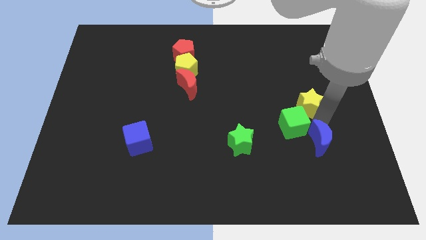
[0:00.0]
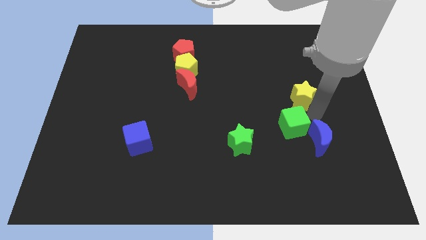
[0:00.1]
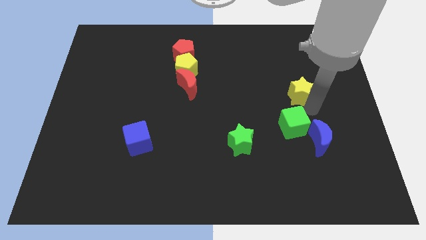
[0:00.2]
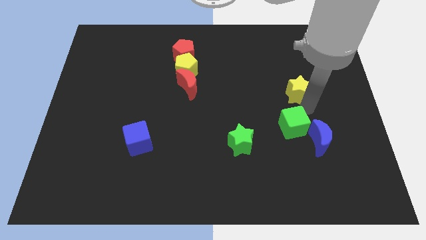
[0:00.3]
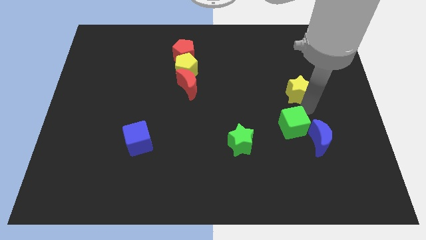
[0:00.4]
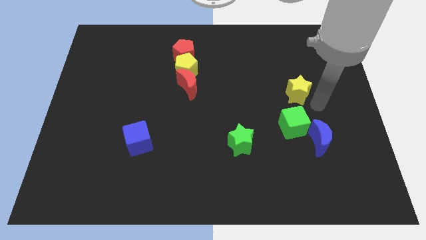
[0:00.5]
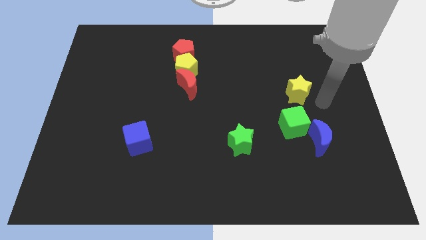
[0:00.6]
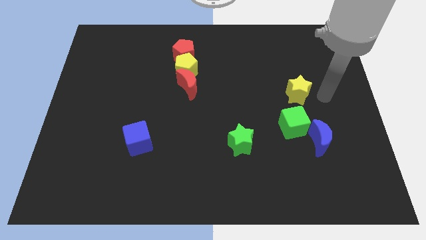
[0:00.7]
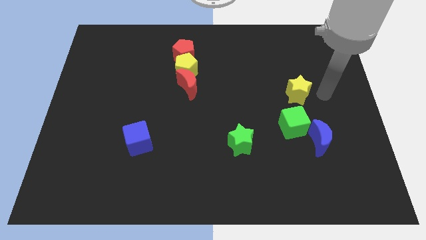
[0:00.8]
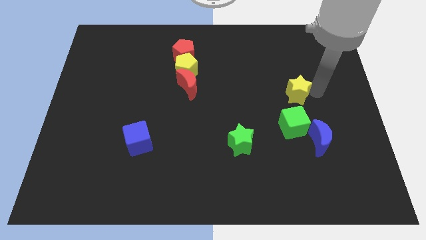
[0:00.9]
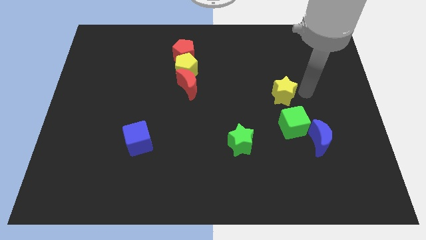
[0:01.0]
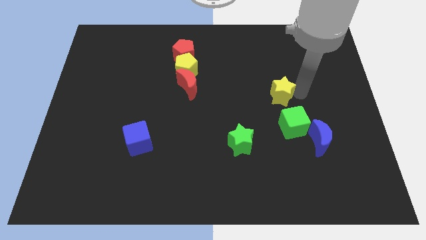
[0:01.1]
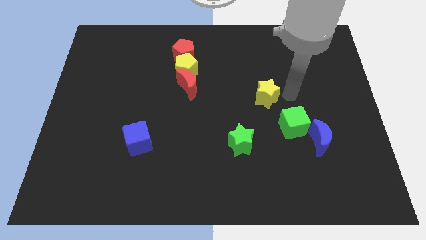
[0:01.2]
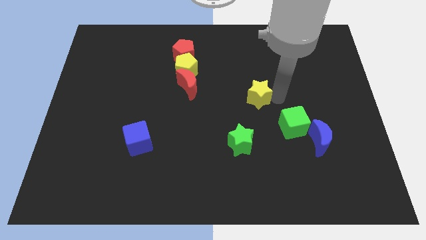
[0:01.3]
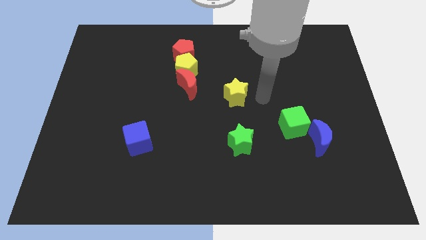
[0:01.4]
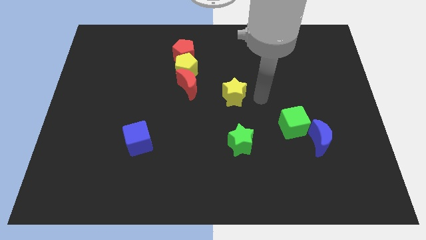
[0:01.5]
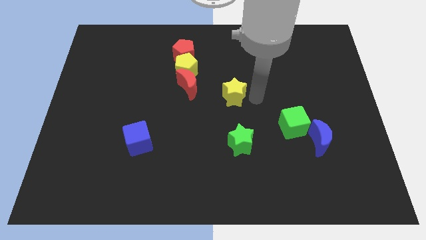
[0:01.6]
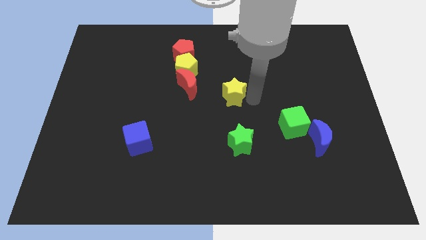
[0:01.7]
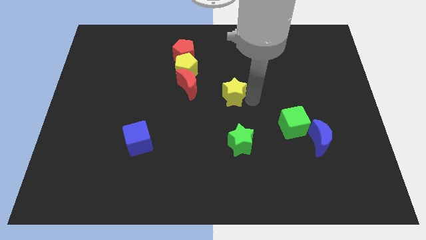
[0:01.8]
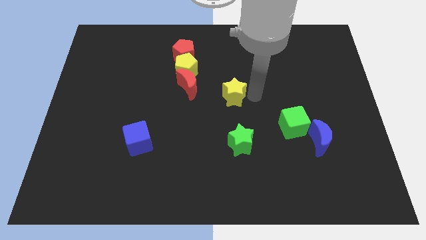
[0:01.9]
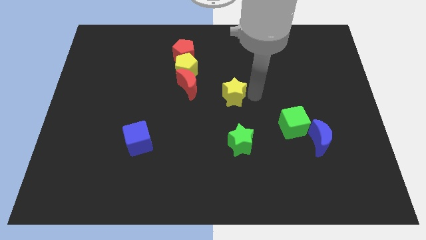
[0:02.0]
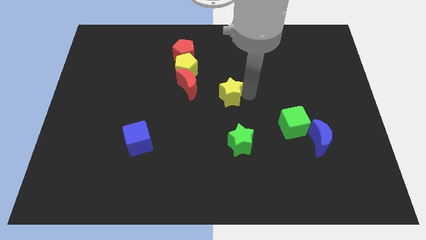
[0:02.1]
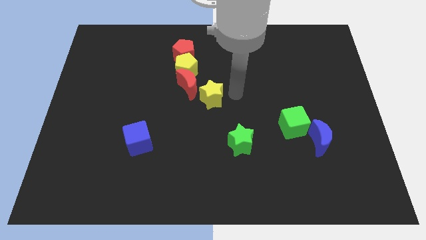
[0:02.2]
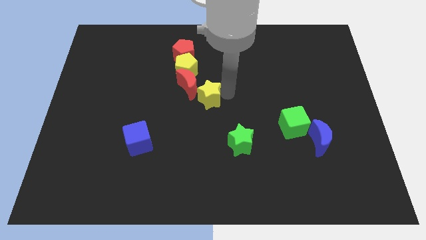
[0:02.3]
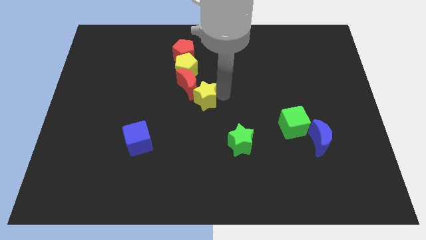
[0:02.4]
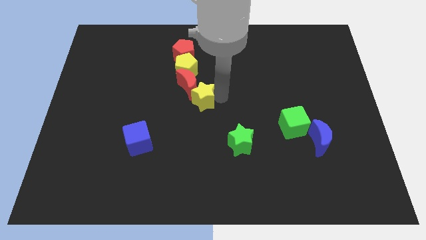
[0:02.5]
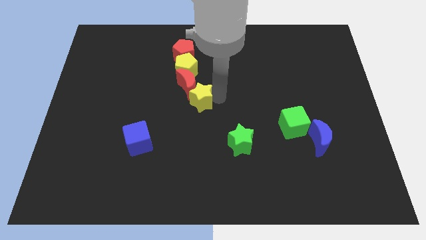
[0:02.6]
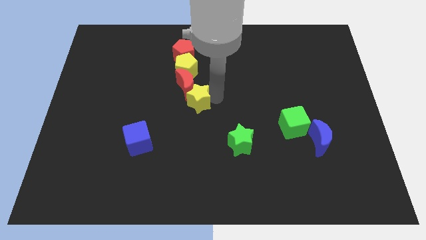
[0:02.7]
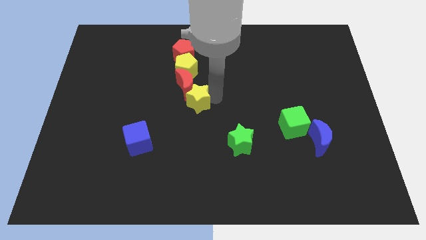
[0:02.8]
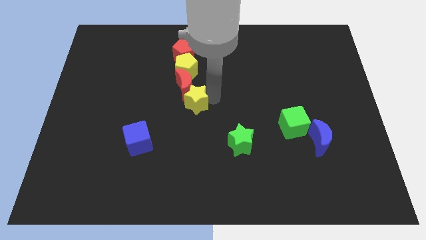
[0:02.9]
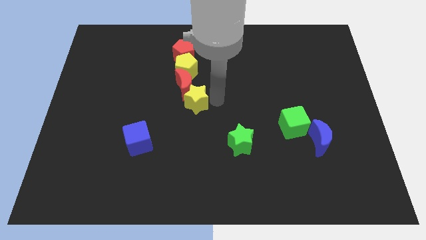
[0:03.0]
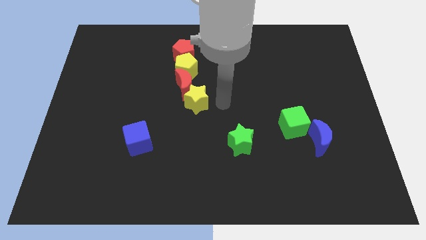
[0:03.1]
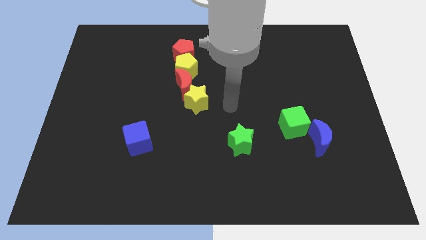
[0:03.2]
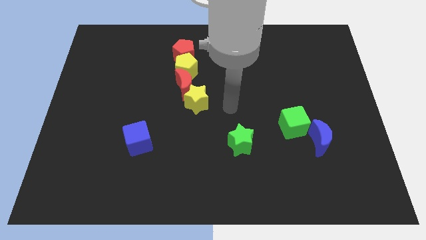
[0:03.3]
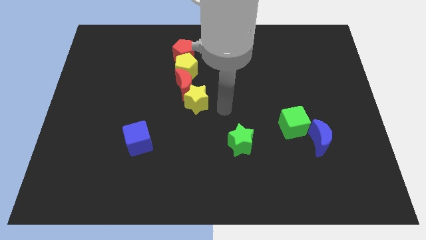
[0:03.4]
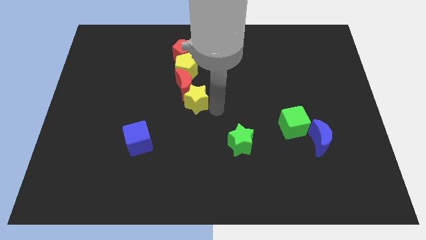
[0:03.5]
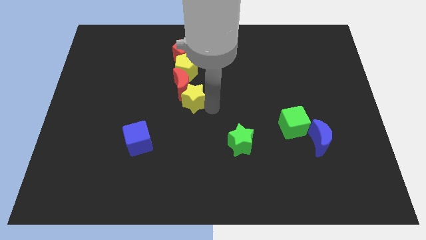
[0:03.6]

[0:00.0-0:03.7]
place the yellow star below the red moon

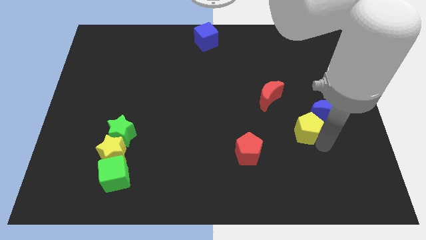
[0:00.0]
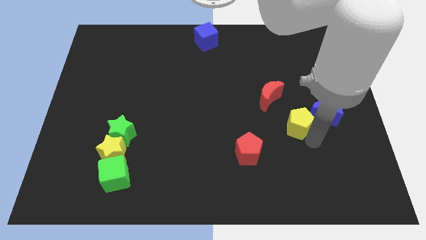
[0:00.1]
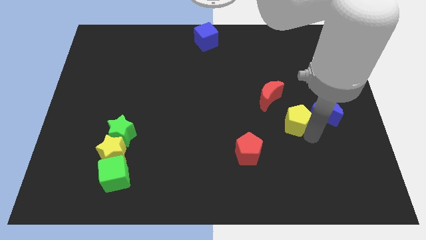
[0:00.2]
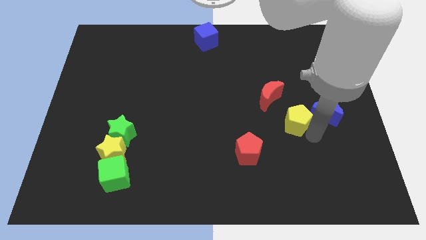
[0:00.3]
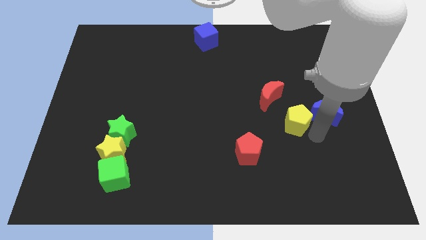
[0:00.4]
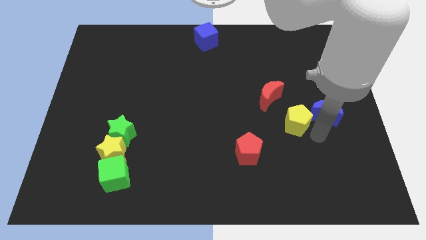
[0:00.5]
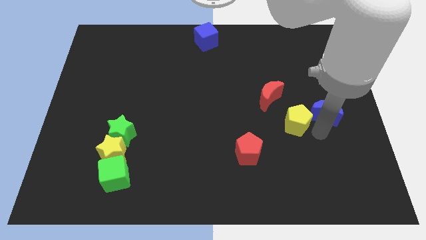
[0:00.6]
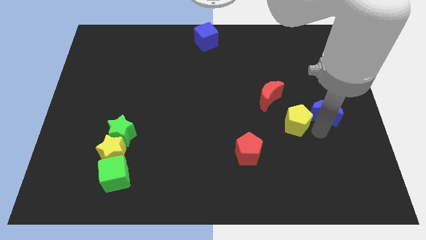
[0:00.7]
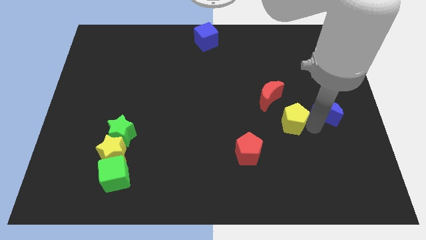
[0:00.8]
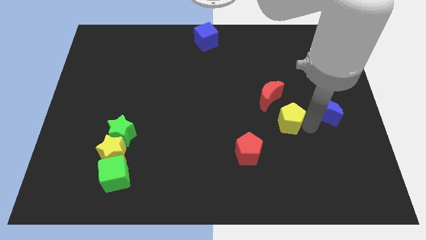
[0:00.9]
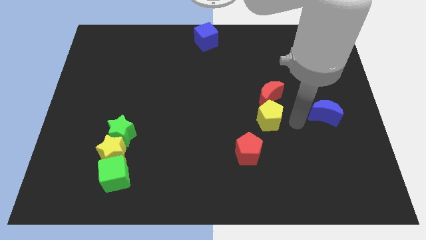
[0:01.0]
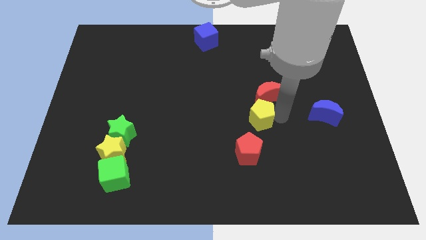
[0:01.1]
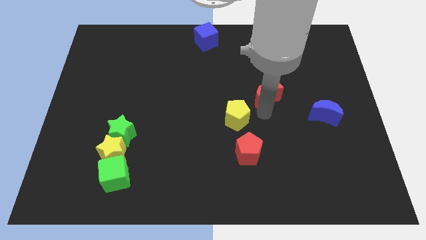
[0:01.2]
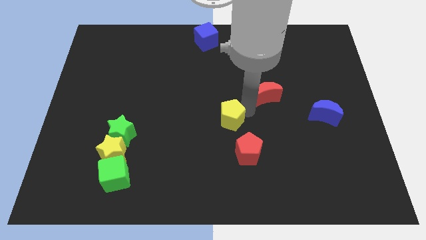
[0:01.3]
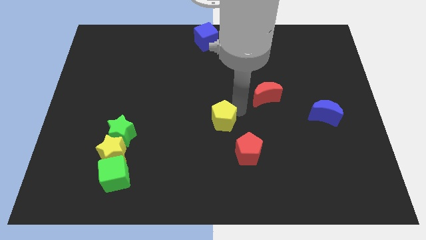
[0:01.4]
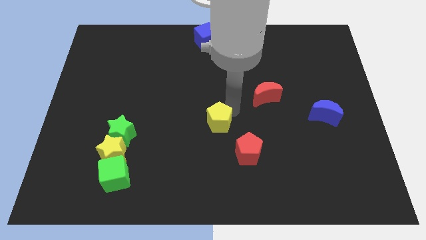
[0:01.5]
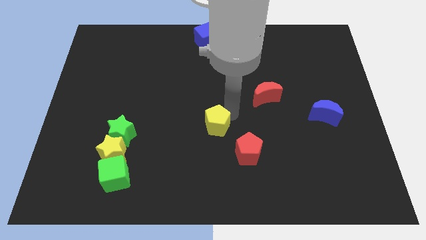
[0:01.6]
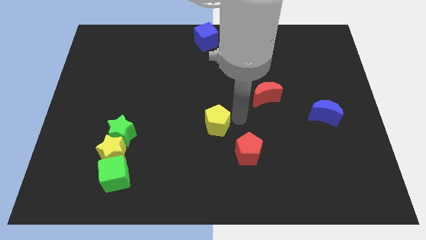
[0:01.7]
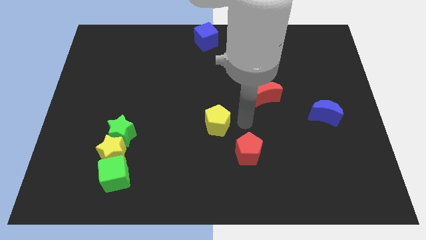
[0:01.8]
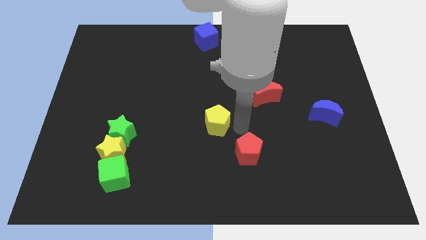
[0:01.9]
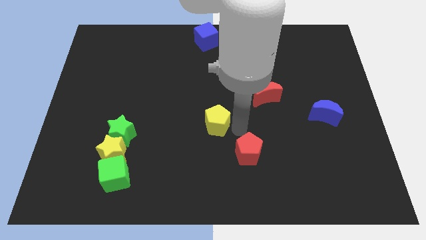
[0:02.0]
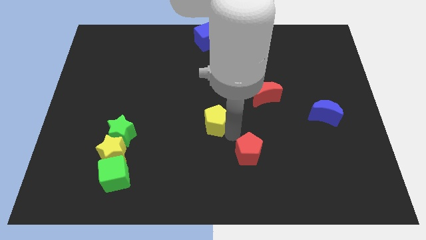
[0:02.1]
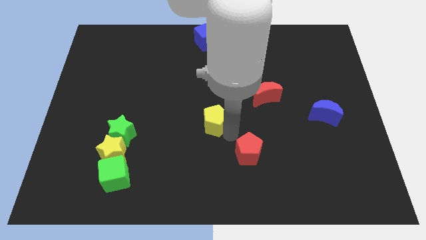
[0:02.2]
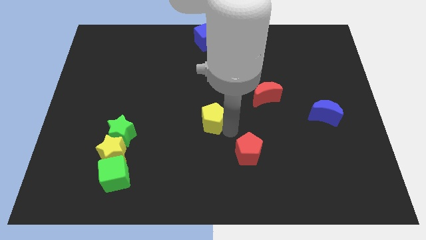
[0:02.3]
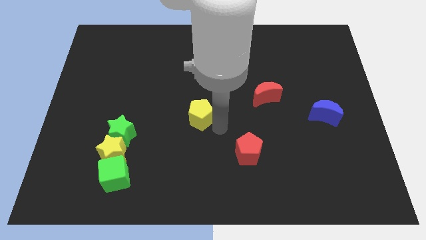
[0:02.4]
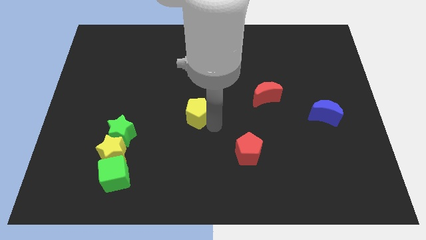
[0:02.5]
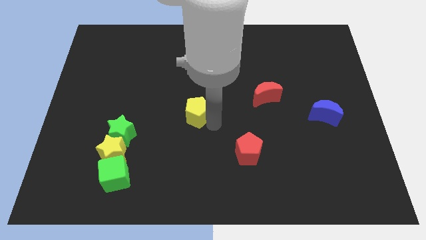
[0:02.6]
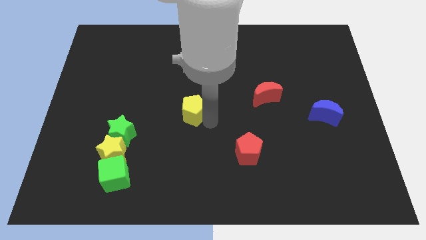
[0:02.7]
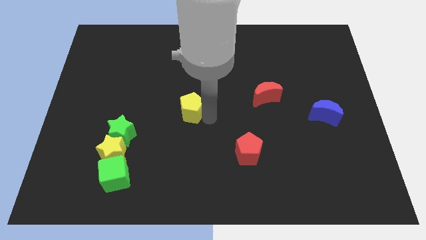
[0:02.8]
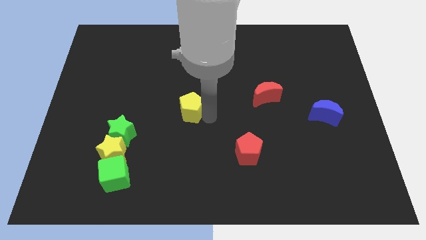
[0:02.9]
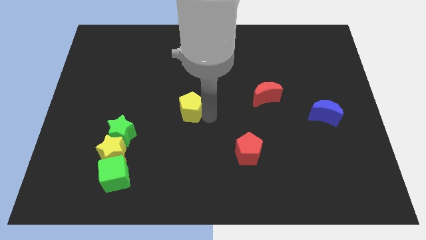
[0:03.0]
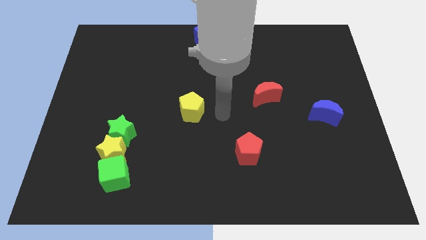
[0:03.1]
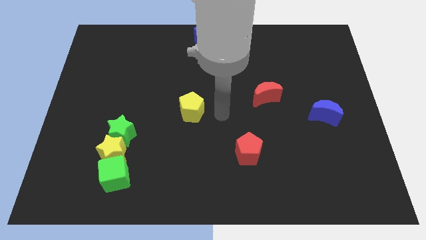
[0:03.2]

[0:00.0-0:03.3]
separate the yellow pentagon from the blue moon

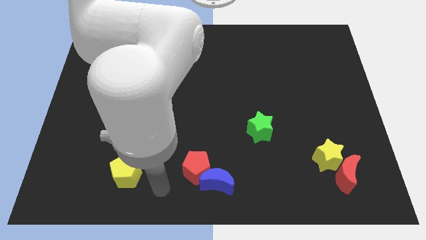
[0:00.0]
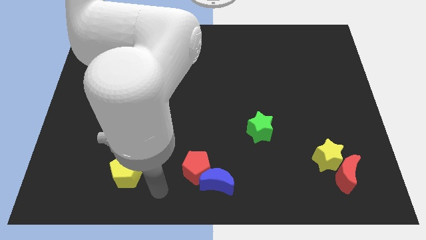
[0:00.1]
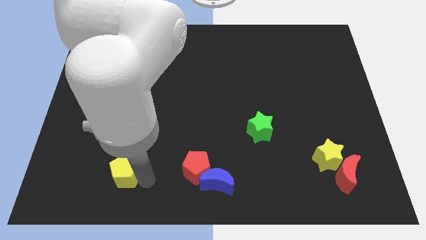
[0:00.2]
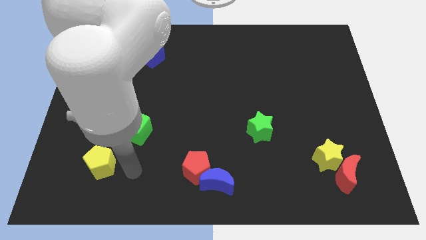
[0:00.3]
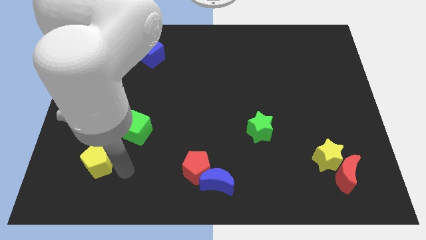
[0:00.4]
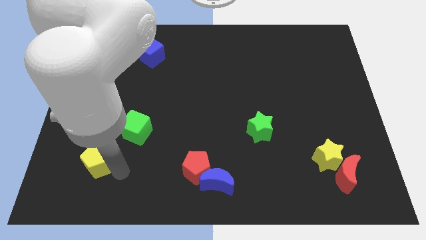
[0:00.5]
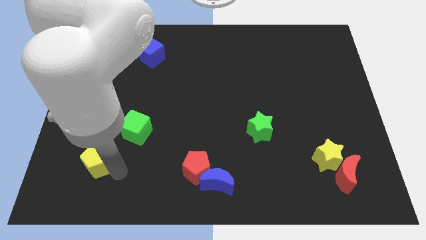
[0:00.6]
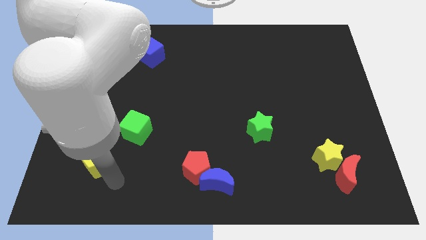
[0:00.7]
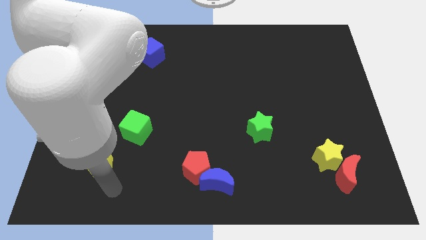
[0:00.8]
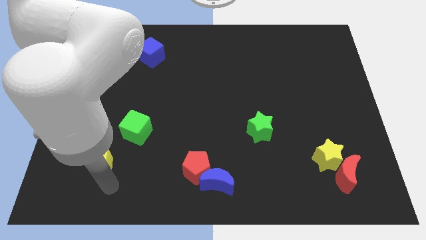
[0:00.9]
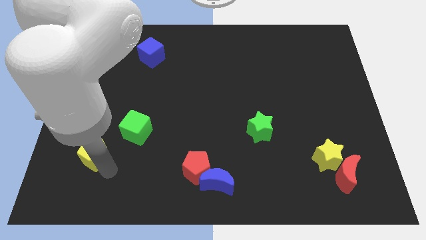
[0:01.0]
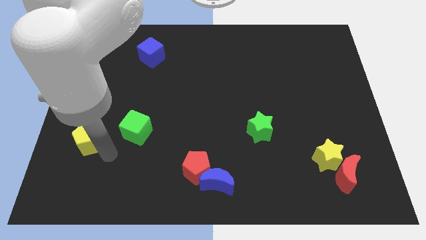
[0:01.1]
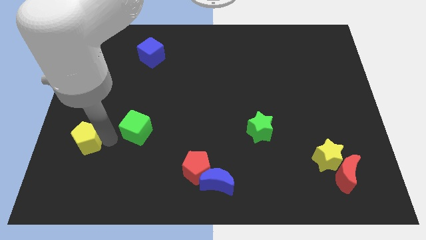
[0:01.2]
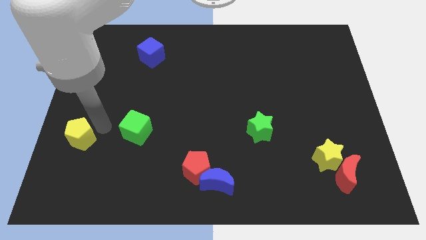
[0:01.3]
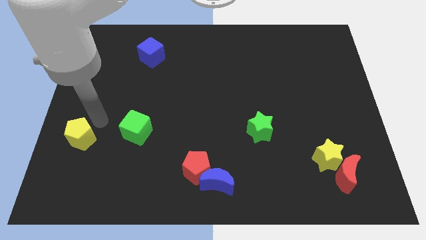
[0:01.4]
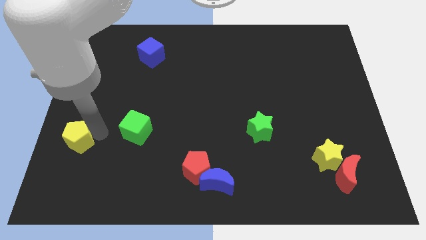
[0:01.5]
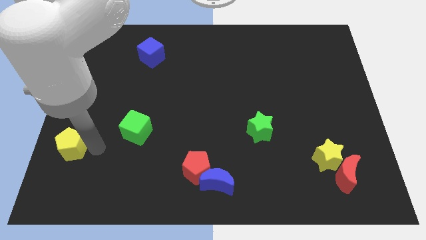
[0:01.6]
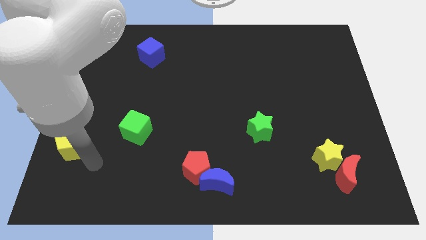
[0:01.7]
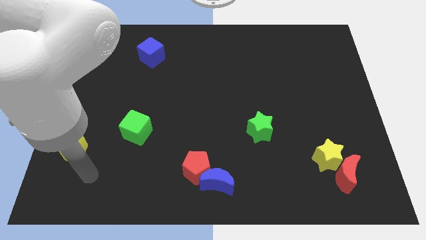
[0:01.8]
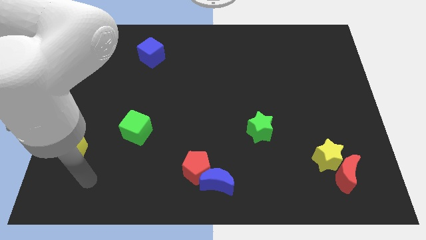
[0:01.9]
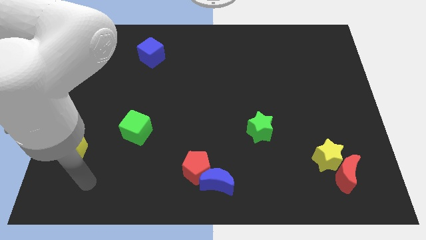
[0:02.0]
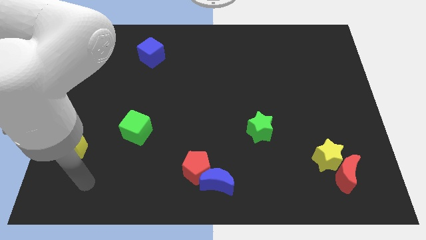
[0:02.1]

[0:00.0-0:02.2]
push the yellow pentagon towards the left side of the board
